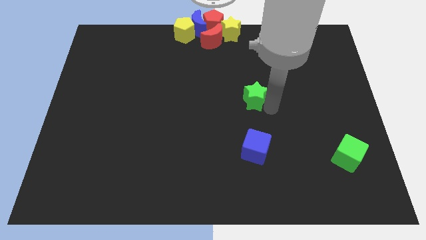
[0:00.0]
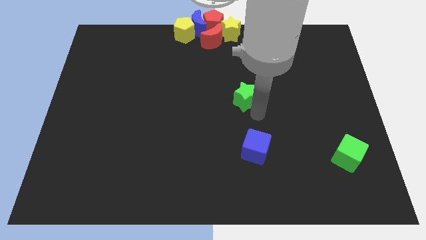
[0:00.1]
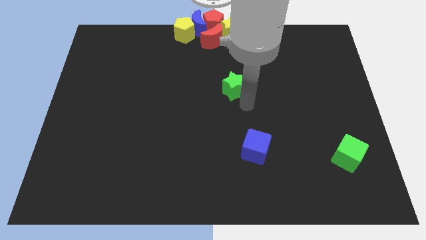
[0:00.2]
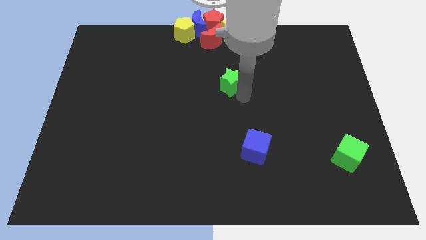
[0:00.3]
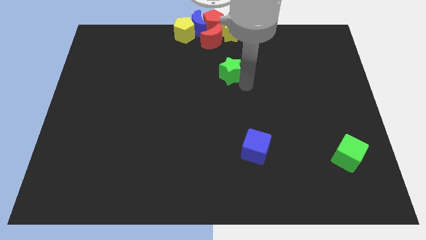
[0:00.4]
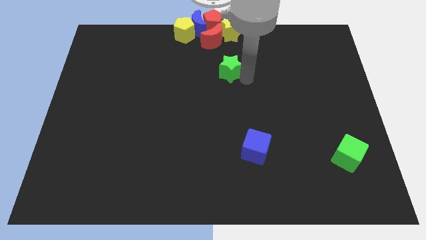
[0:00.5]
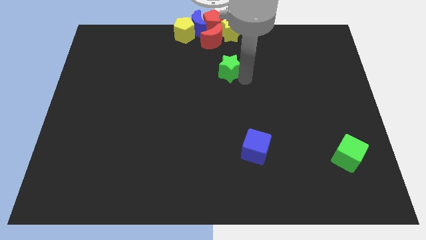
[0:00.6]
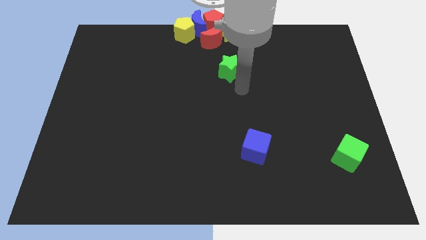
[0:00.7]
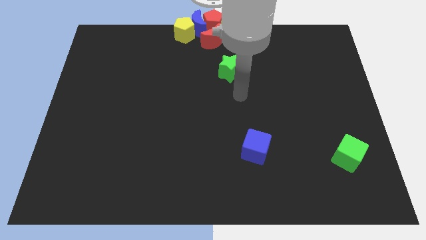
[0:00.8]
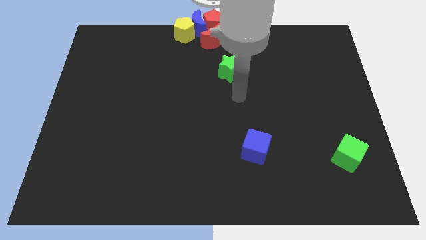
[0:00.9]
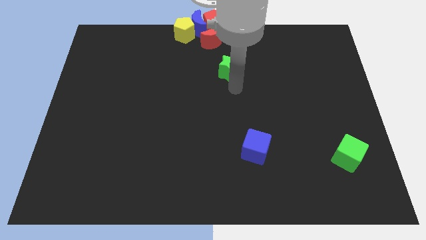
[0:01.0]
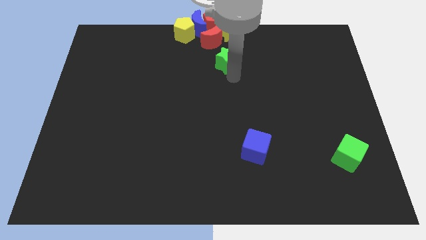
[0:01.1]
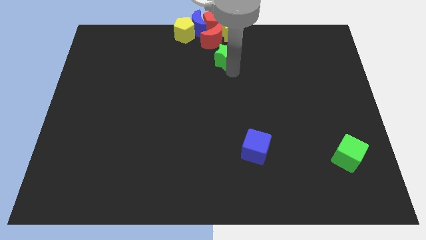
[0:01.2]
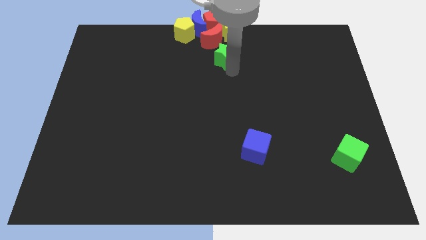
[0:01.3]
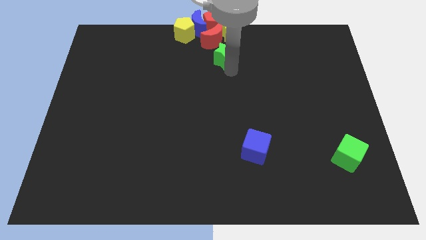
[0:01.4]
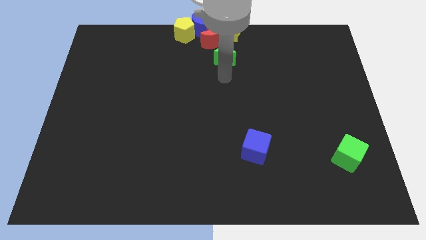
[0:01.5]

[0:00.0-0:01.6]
slide the green star towards the group of blocks

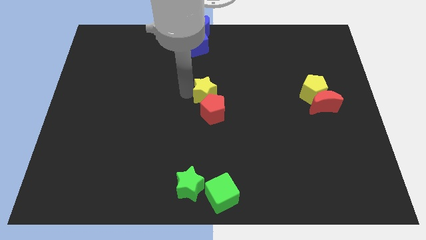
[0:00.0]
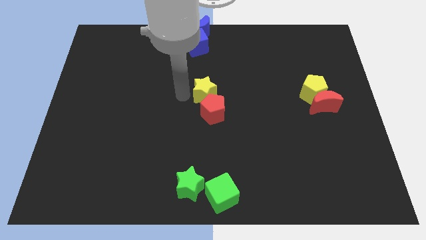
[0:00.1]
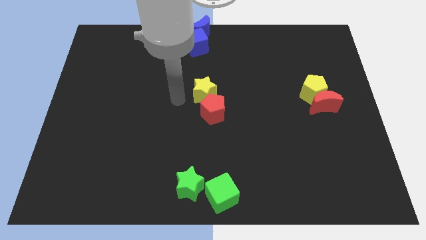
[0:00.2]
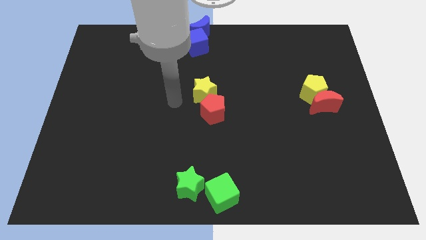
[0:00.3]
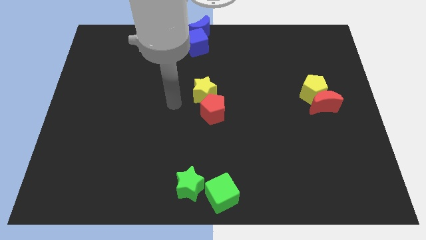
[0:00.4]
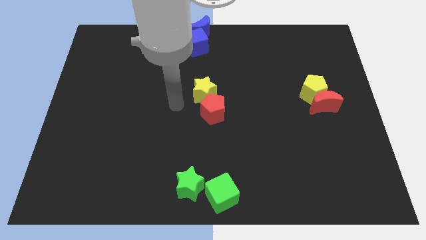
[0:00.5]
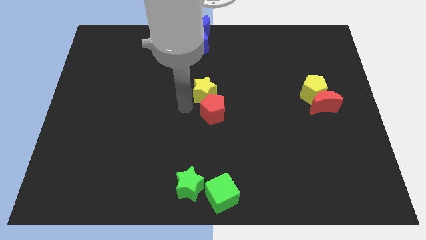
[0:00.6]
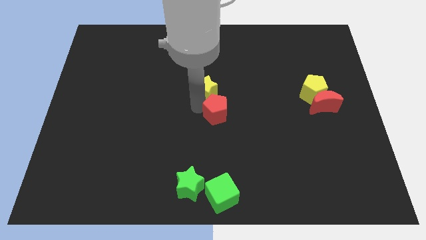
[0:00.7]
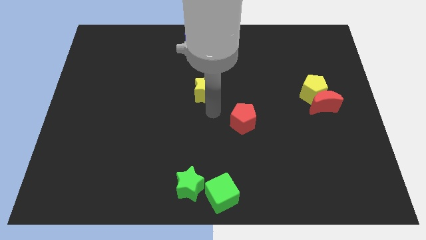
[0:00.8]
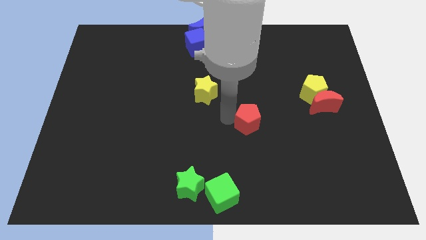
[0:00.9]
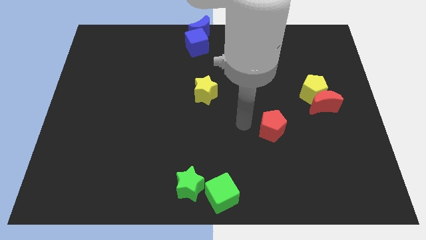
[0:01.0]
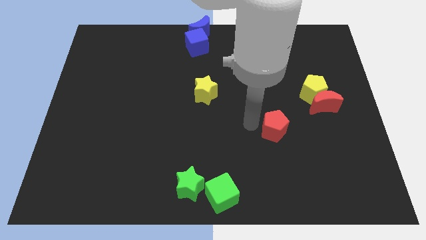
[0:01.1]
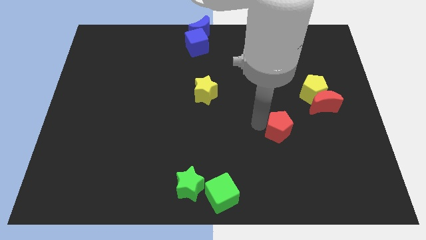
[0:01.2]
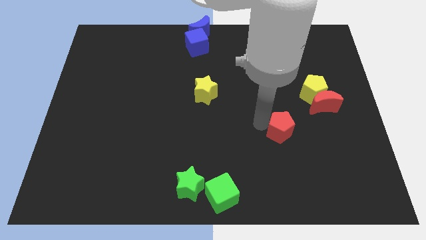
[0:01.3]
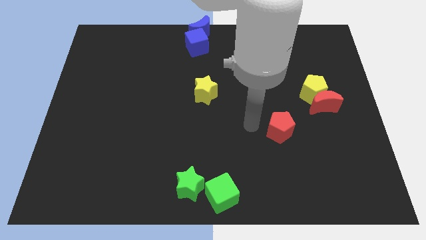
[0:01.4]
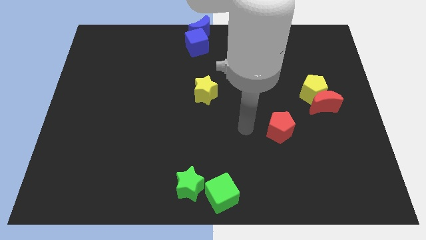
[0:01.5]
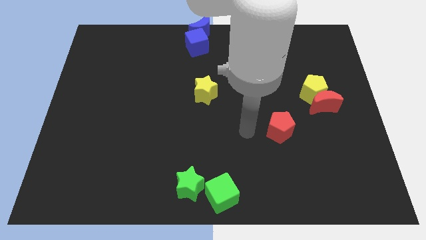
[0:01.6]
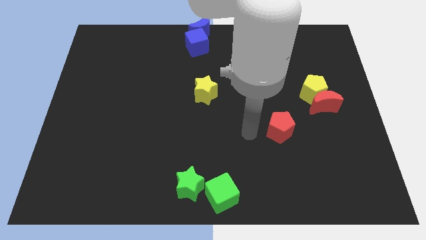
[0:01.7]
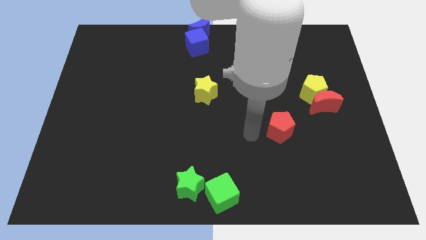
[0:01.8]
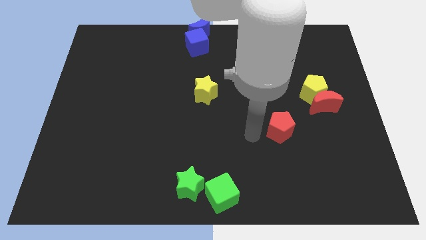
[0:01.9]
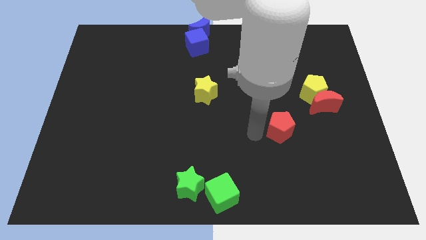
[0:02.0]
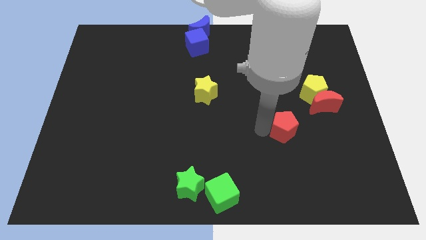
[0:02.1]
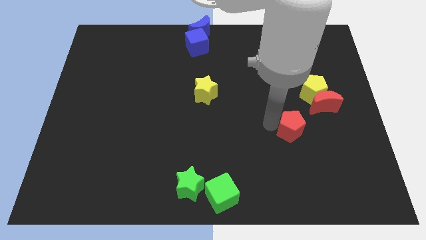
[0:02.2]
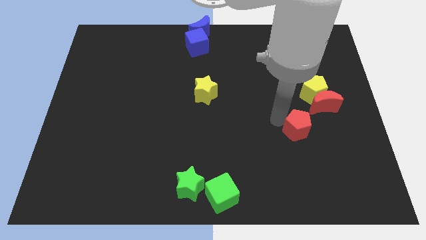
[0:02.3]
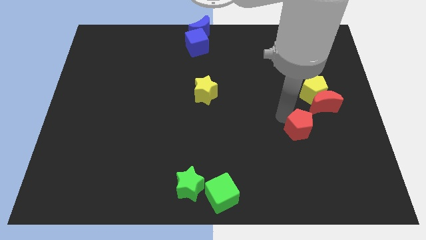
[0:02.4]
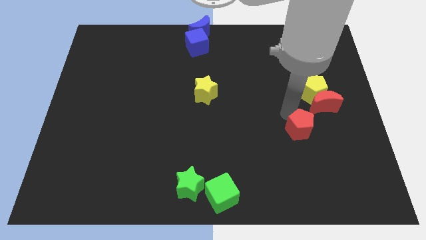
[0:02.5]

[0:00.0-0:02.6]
move the red pentagon away from the yellow star

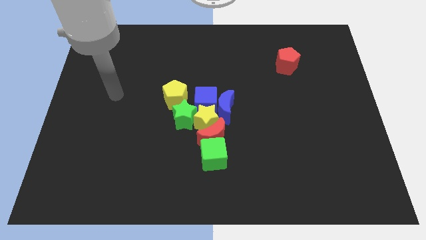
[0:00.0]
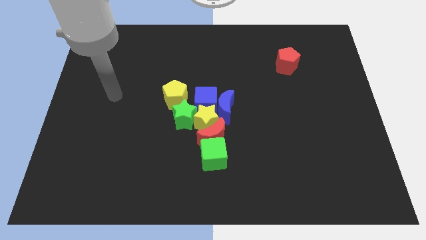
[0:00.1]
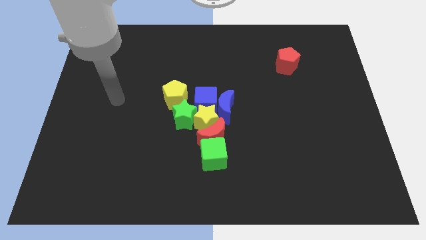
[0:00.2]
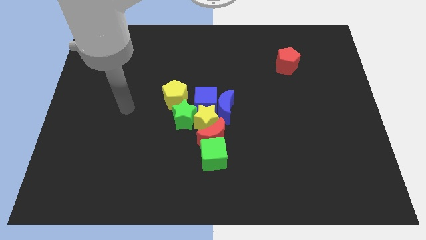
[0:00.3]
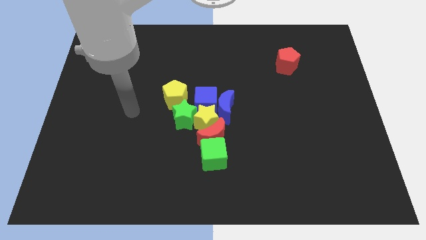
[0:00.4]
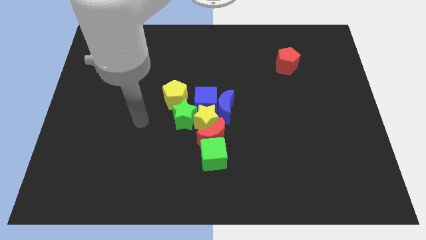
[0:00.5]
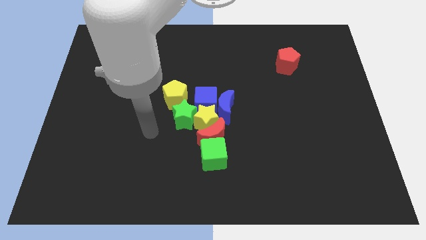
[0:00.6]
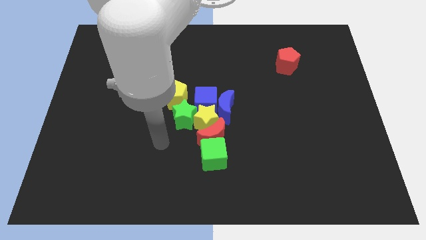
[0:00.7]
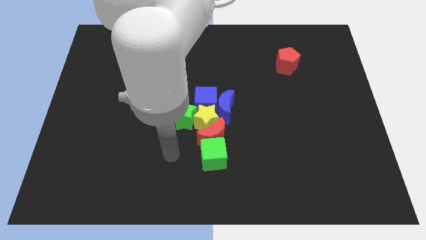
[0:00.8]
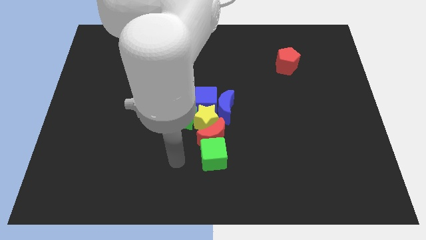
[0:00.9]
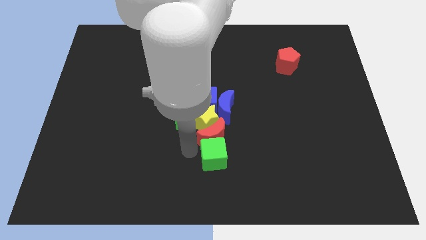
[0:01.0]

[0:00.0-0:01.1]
point your arm at the left of the green cube

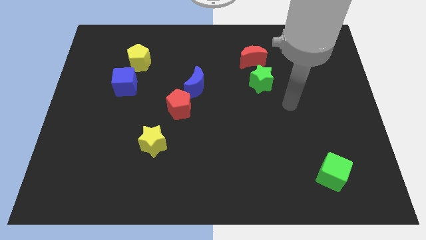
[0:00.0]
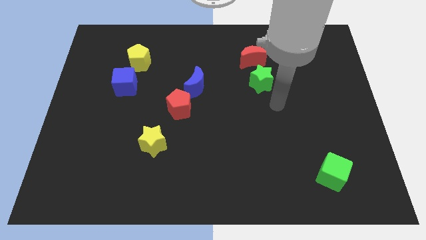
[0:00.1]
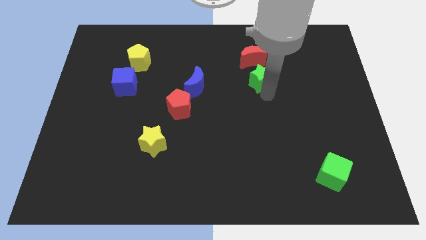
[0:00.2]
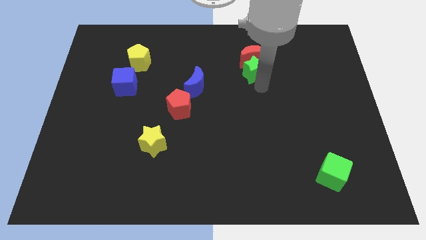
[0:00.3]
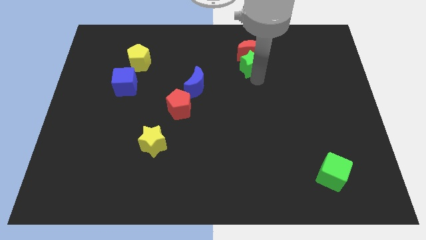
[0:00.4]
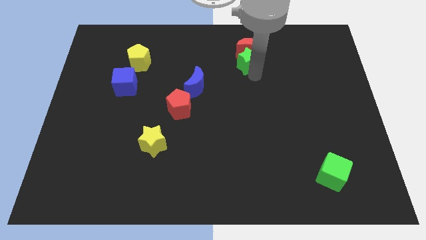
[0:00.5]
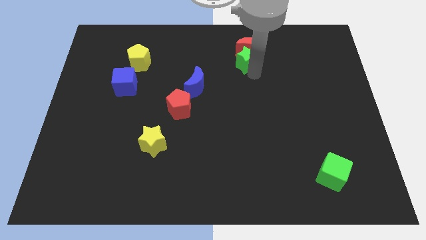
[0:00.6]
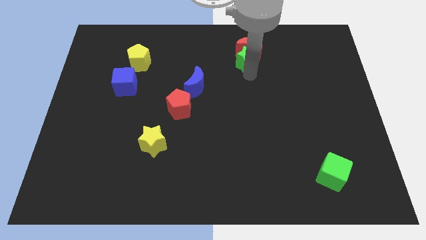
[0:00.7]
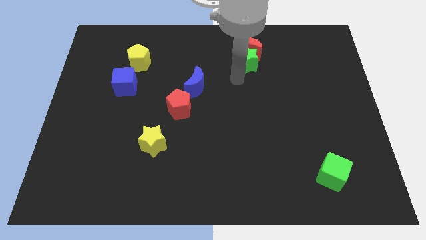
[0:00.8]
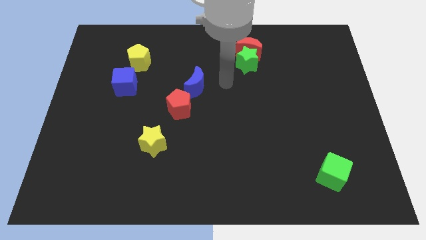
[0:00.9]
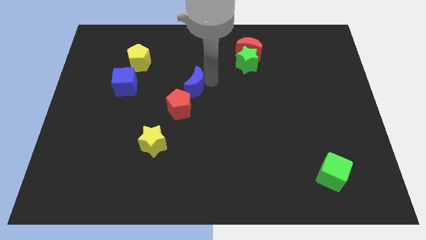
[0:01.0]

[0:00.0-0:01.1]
slide green star into red moon

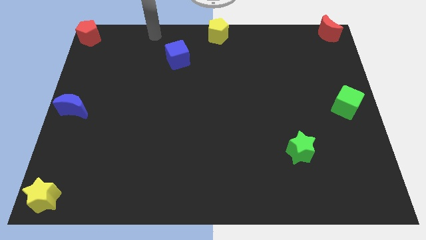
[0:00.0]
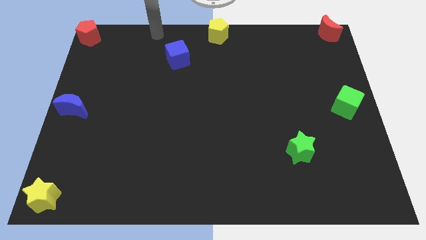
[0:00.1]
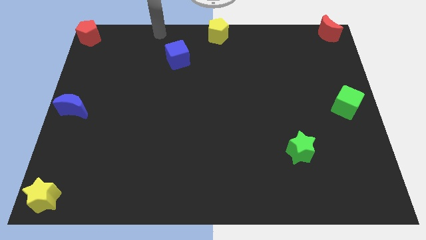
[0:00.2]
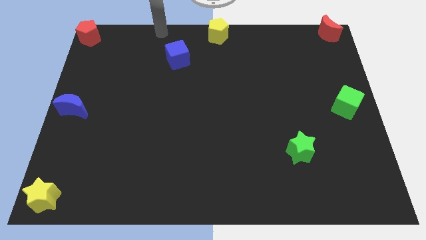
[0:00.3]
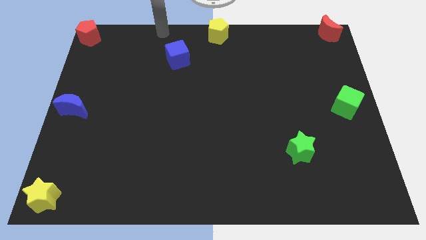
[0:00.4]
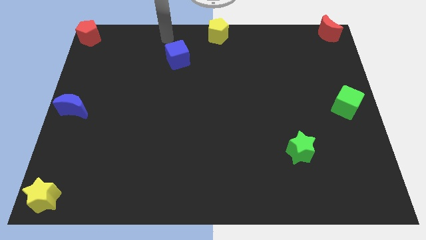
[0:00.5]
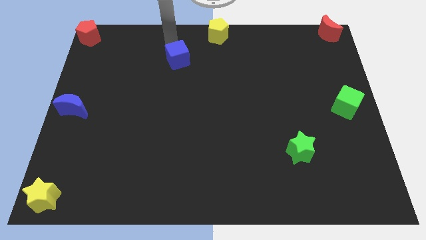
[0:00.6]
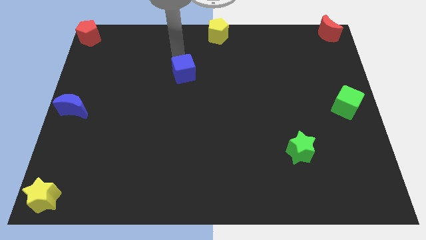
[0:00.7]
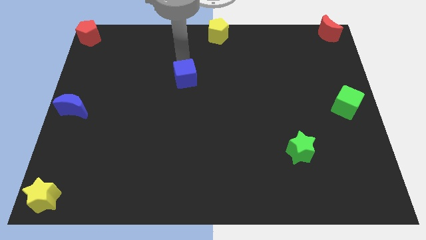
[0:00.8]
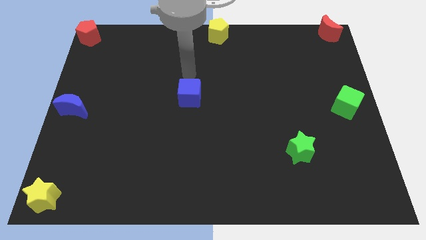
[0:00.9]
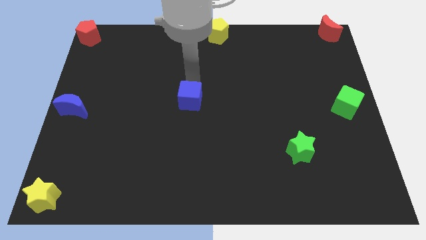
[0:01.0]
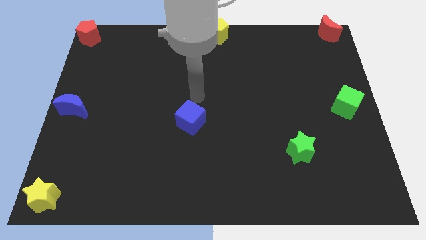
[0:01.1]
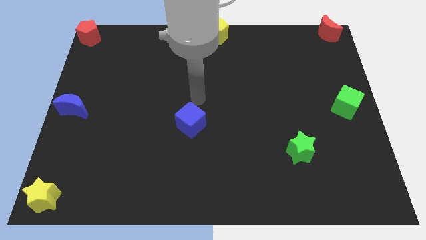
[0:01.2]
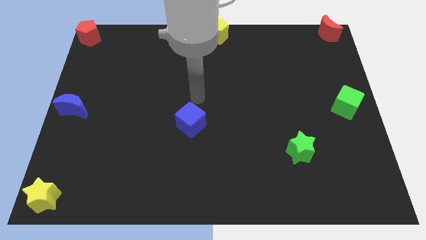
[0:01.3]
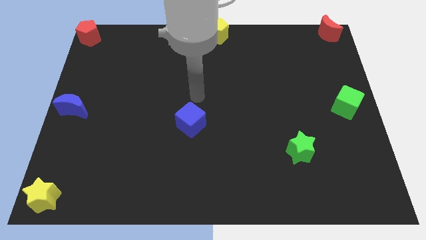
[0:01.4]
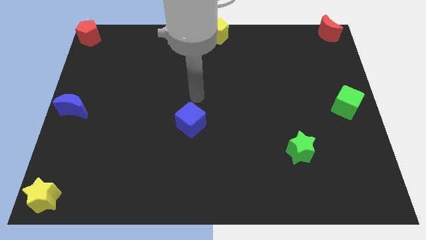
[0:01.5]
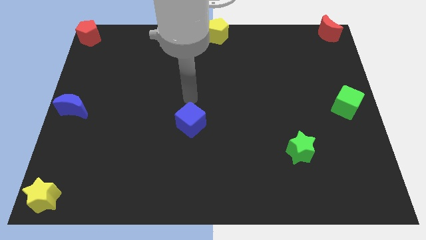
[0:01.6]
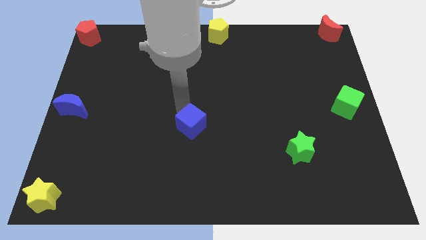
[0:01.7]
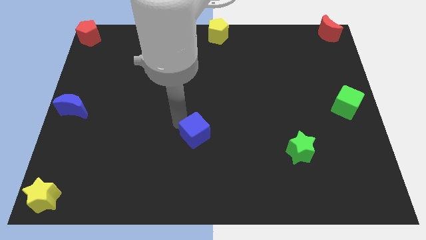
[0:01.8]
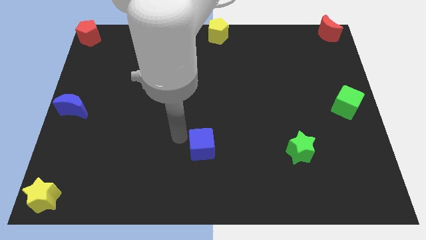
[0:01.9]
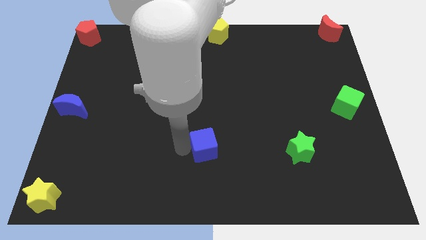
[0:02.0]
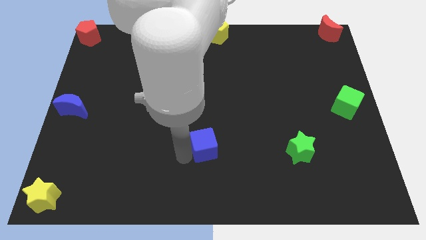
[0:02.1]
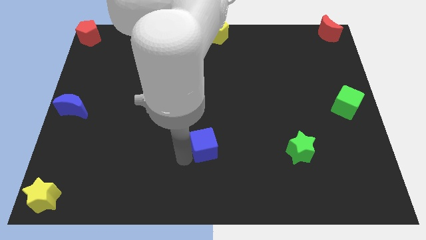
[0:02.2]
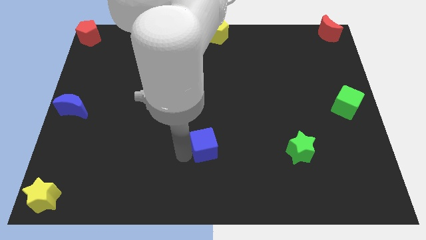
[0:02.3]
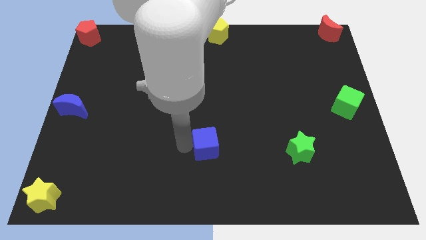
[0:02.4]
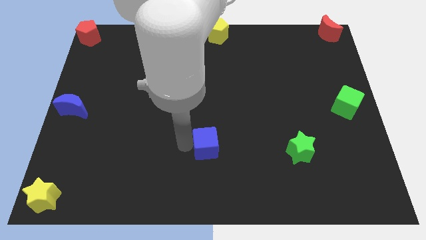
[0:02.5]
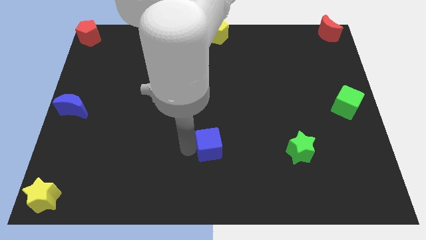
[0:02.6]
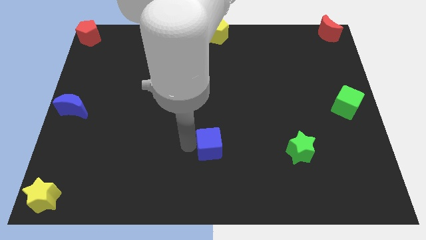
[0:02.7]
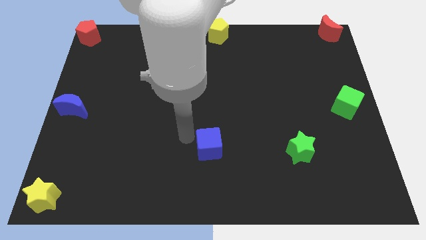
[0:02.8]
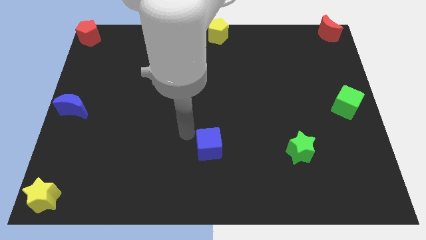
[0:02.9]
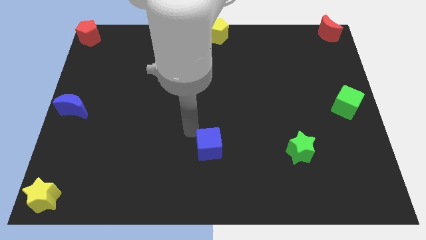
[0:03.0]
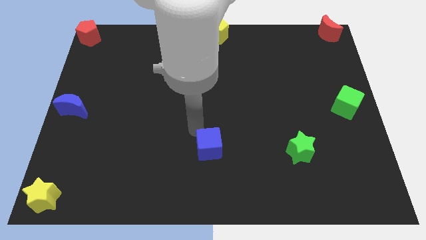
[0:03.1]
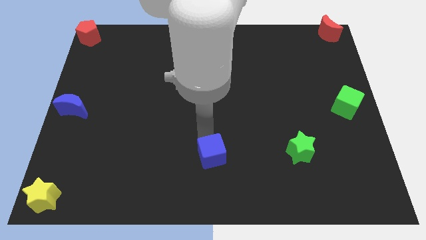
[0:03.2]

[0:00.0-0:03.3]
move the blue cube to the left of the green star
